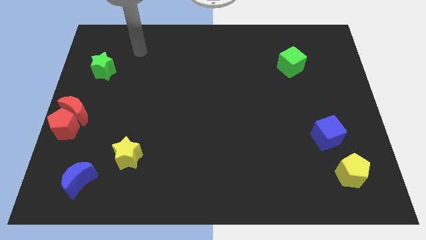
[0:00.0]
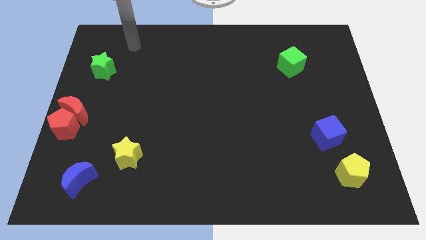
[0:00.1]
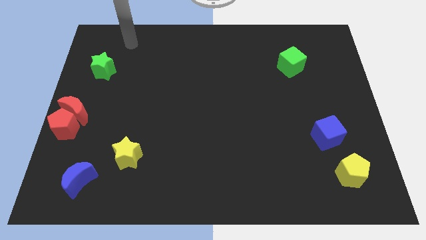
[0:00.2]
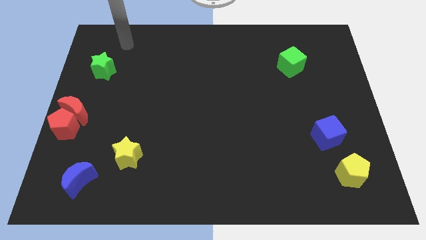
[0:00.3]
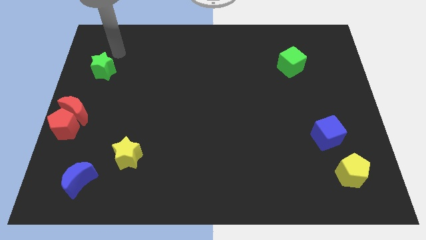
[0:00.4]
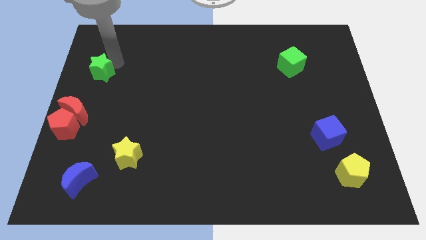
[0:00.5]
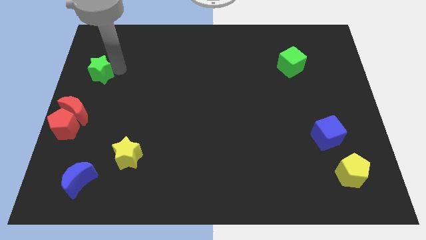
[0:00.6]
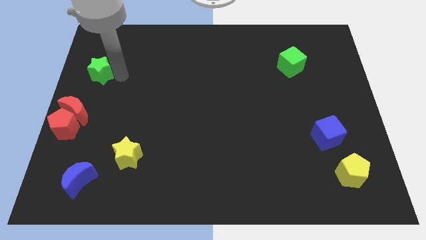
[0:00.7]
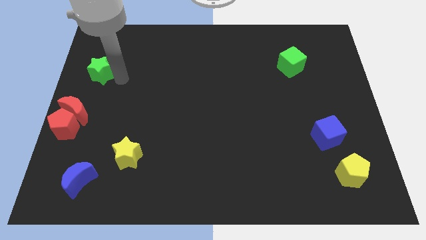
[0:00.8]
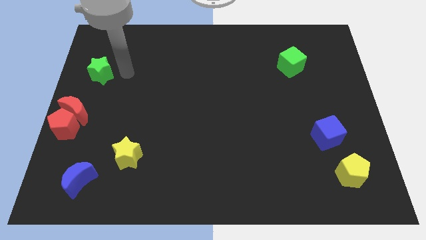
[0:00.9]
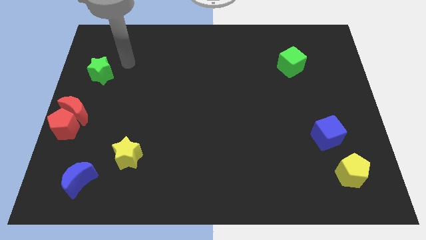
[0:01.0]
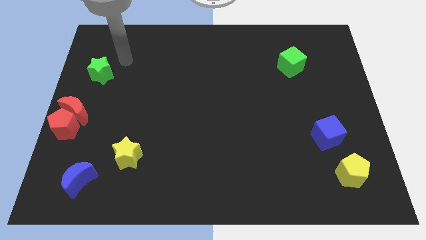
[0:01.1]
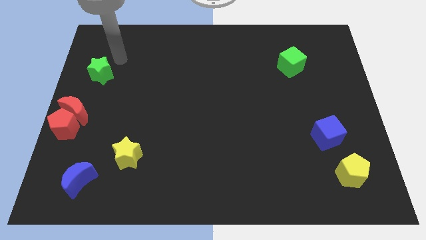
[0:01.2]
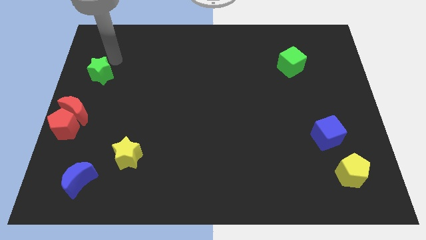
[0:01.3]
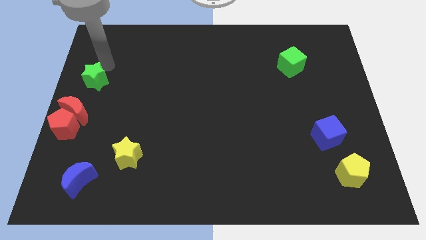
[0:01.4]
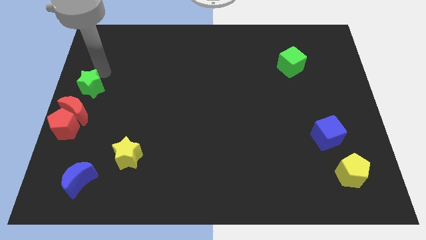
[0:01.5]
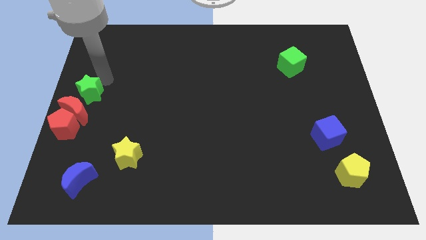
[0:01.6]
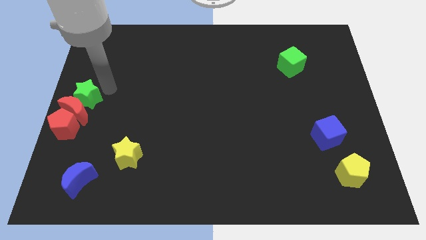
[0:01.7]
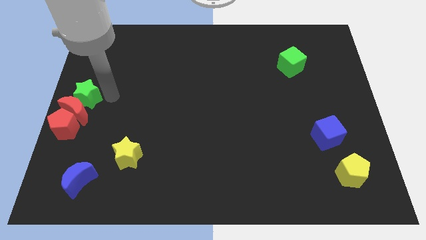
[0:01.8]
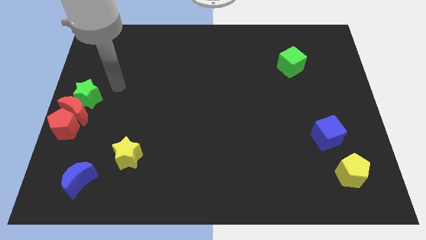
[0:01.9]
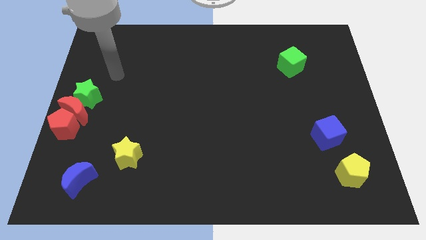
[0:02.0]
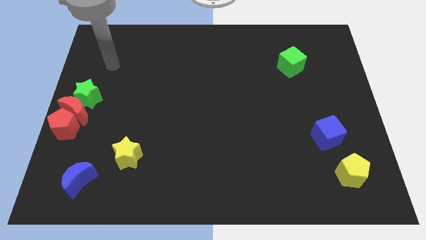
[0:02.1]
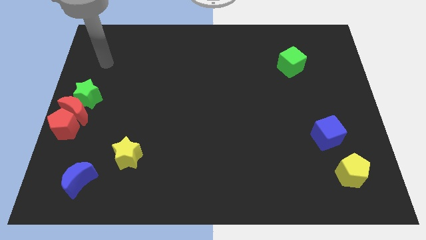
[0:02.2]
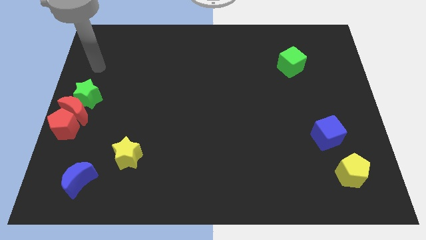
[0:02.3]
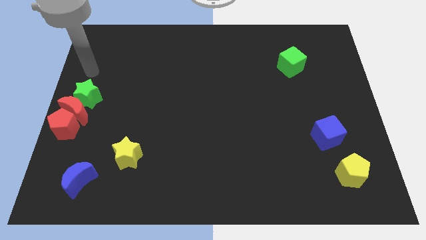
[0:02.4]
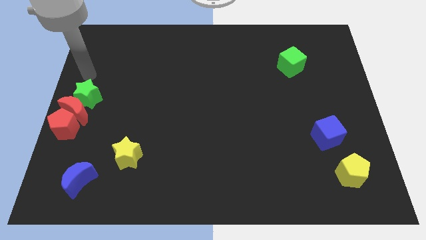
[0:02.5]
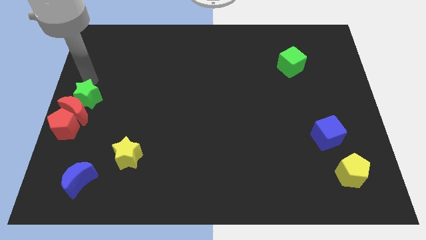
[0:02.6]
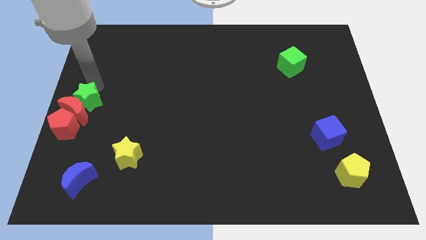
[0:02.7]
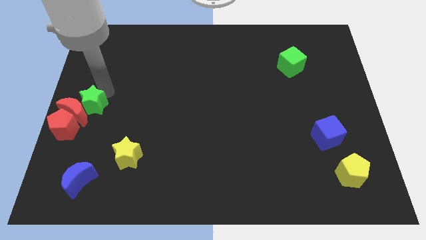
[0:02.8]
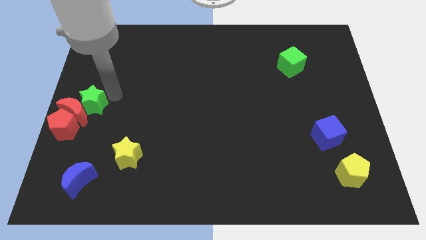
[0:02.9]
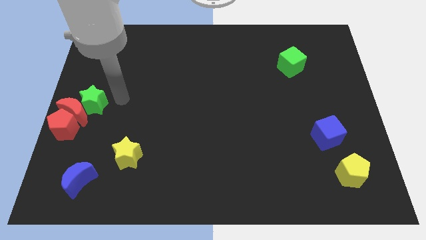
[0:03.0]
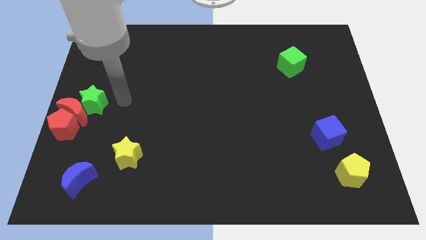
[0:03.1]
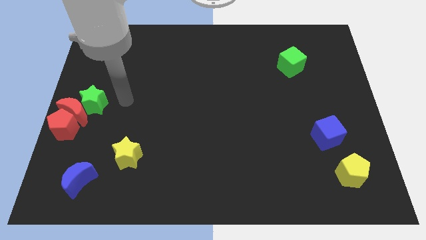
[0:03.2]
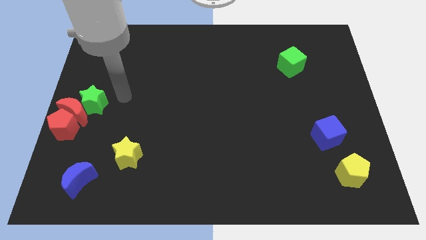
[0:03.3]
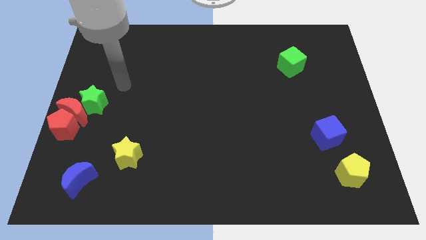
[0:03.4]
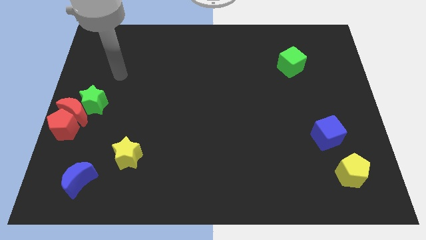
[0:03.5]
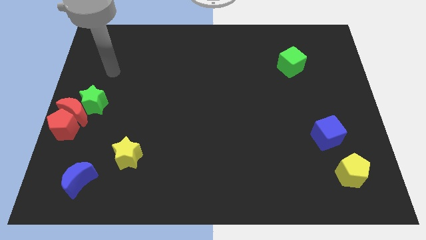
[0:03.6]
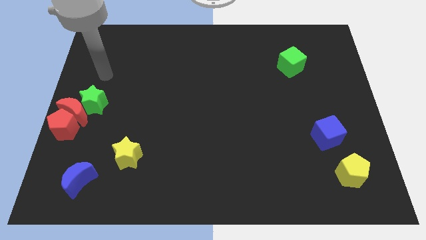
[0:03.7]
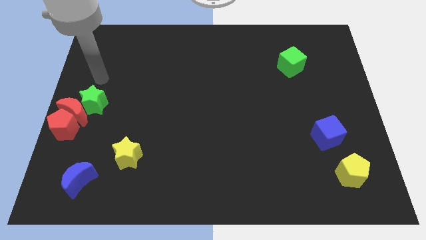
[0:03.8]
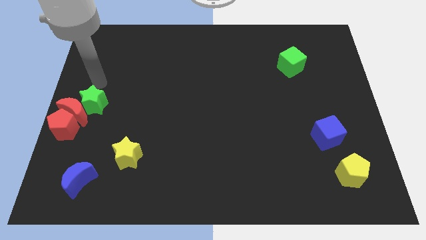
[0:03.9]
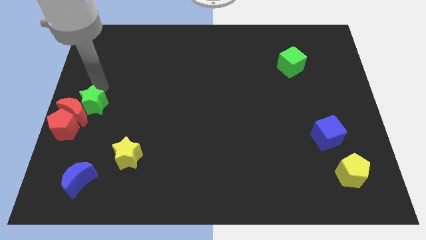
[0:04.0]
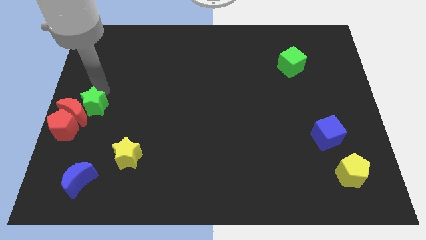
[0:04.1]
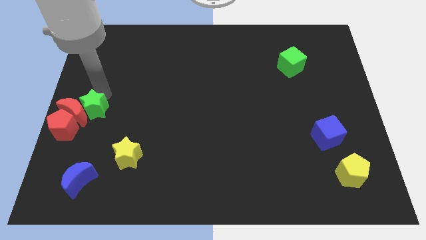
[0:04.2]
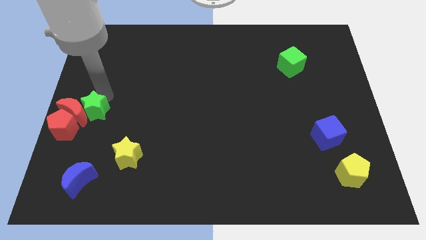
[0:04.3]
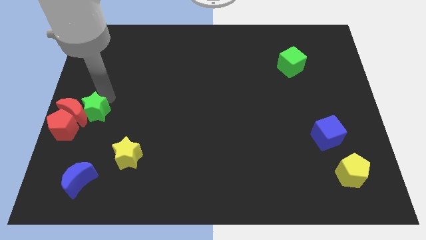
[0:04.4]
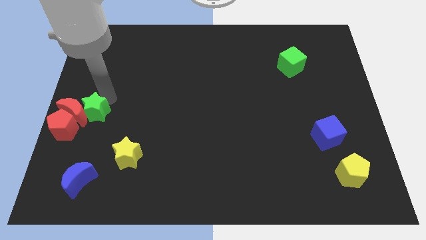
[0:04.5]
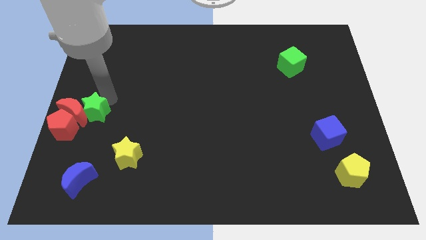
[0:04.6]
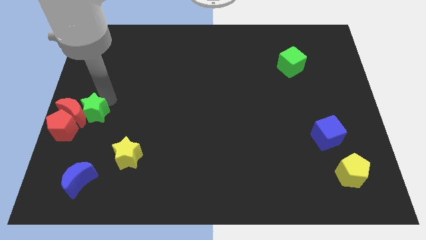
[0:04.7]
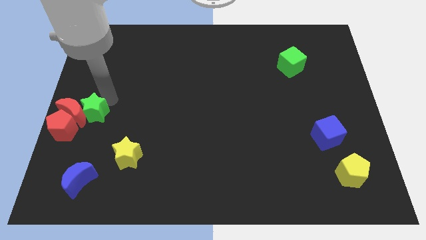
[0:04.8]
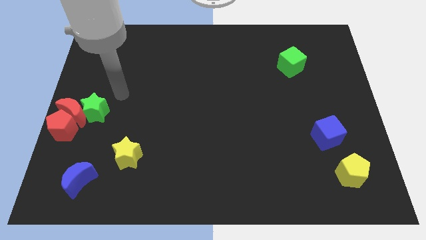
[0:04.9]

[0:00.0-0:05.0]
move the green star into the red moon

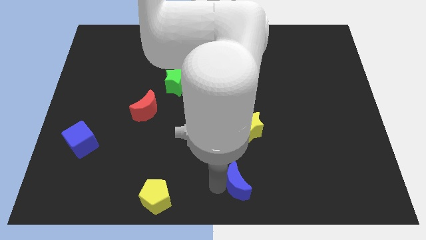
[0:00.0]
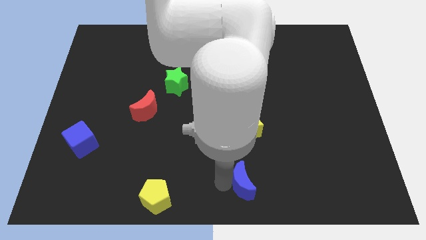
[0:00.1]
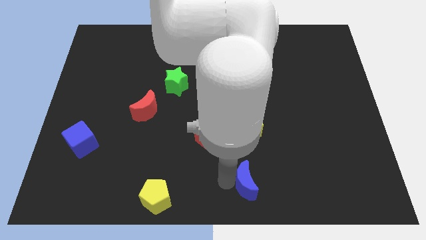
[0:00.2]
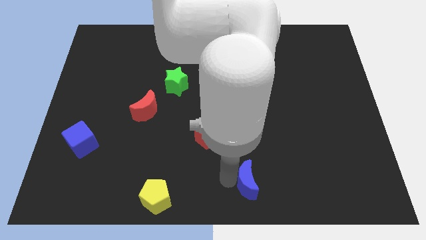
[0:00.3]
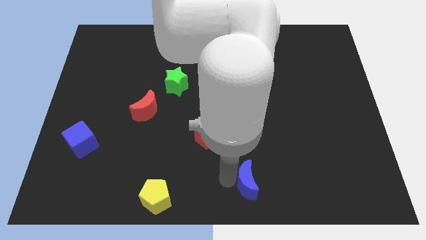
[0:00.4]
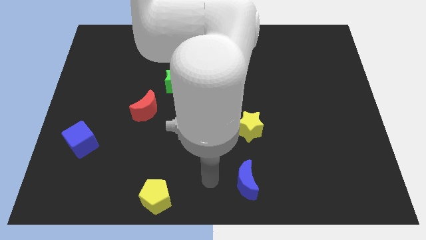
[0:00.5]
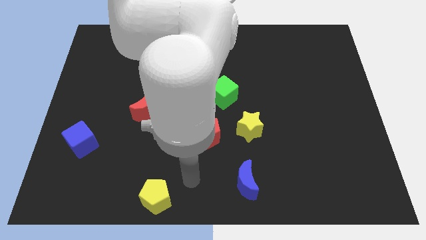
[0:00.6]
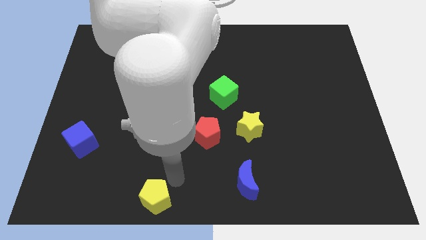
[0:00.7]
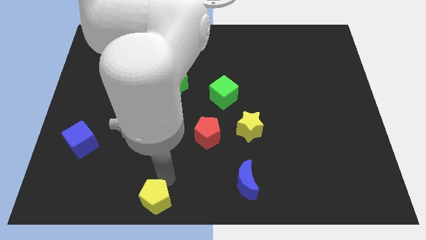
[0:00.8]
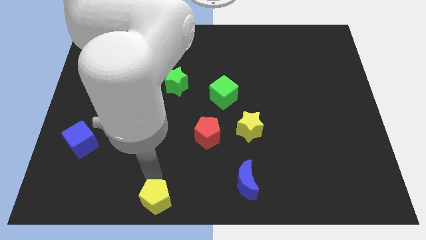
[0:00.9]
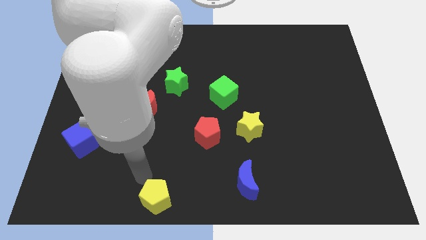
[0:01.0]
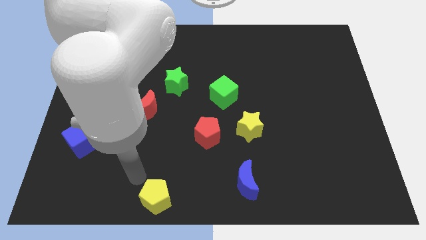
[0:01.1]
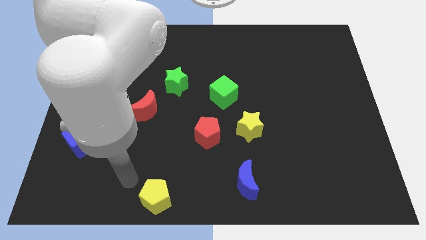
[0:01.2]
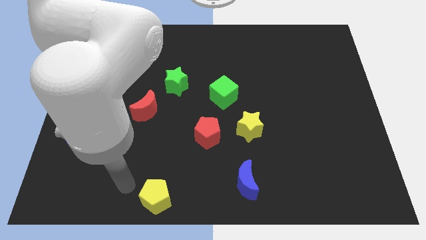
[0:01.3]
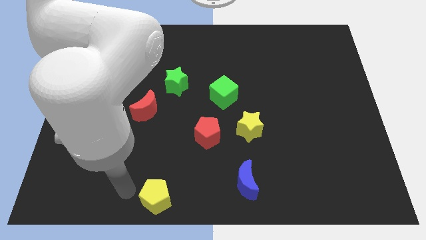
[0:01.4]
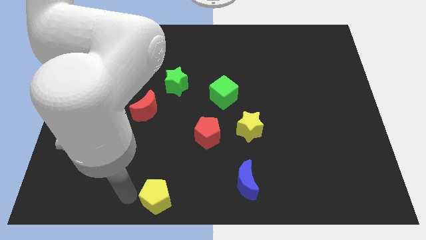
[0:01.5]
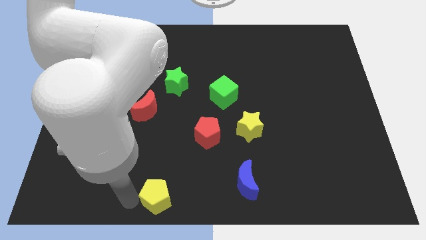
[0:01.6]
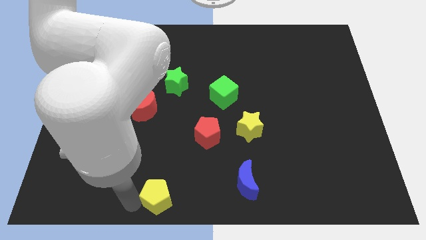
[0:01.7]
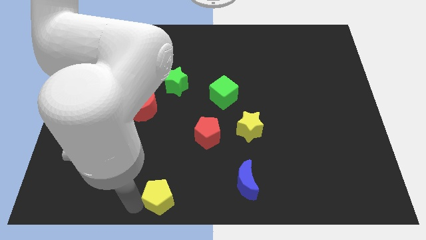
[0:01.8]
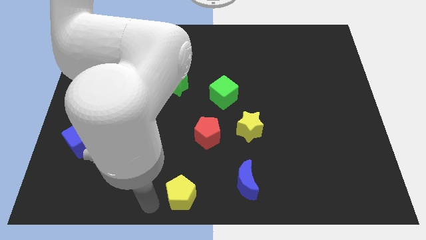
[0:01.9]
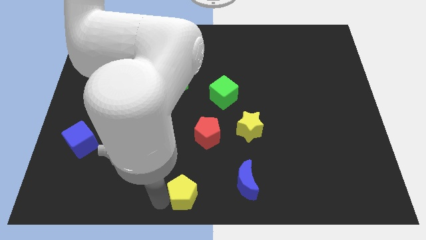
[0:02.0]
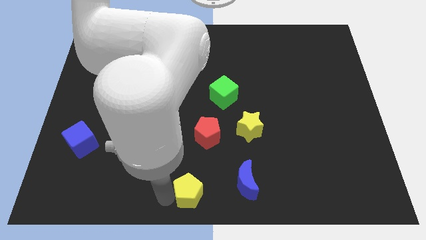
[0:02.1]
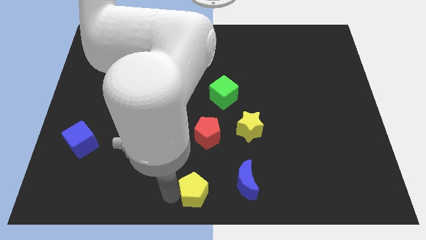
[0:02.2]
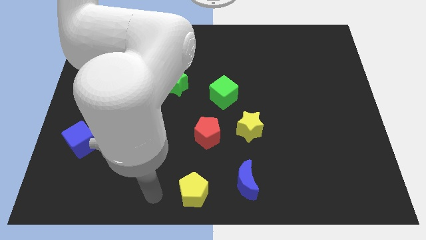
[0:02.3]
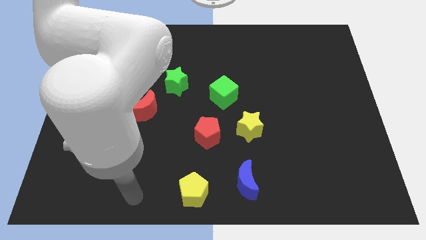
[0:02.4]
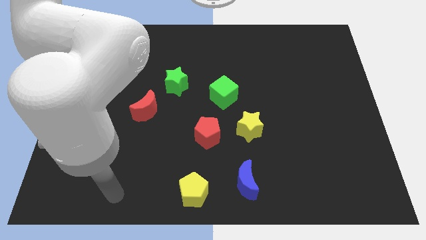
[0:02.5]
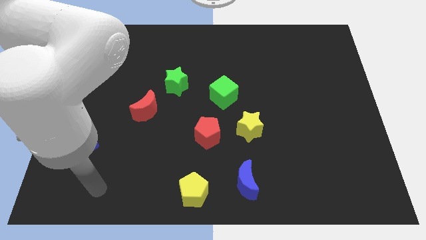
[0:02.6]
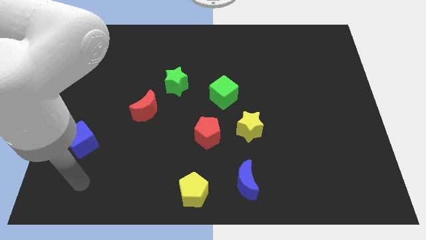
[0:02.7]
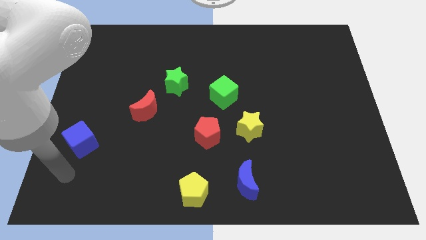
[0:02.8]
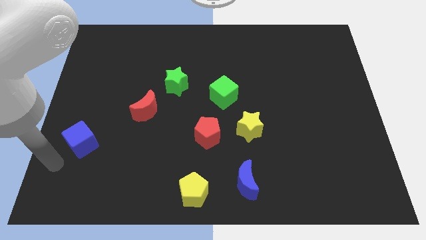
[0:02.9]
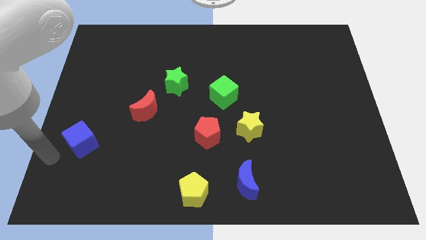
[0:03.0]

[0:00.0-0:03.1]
push the yellow pentagon to the right

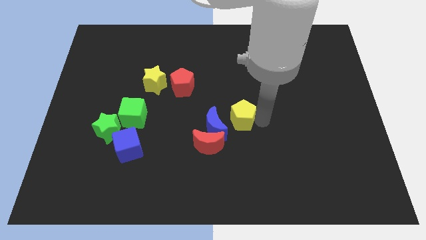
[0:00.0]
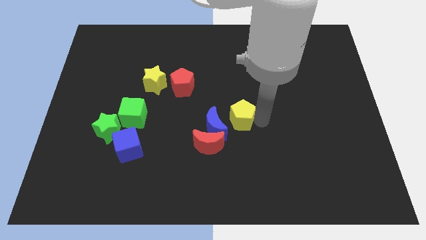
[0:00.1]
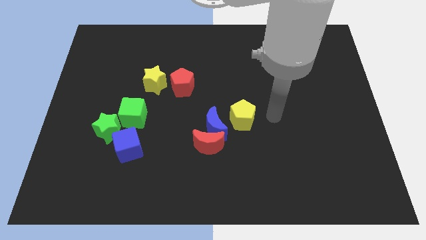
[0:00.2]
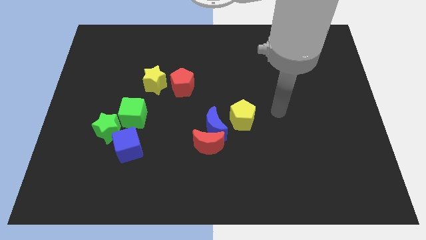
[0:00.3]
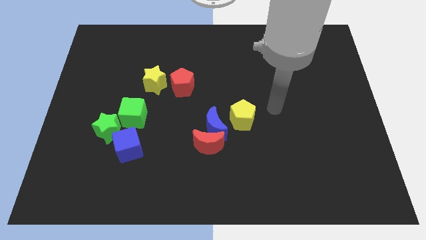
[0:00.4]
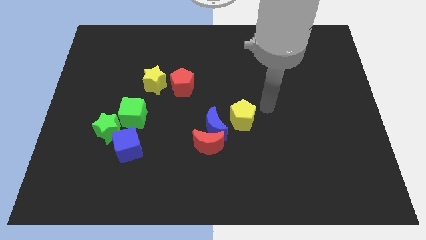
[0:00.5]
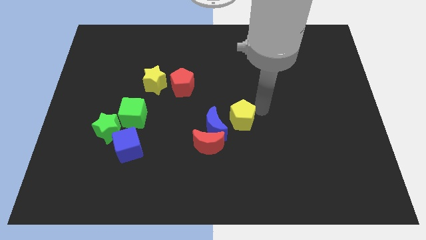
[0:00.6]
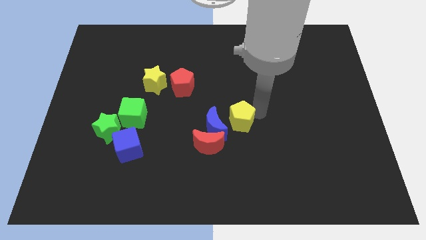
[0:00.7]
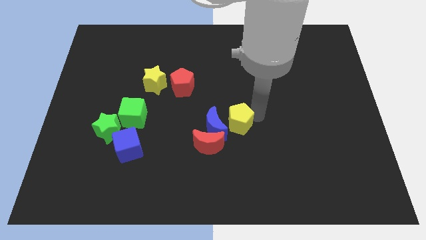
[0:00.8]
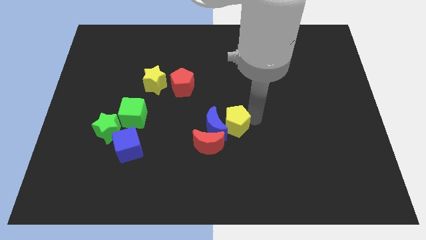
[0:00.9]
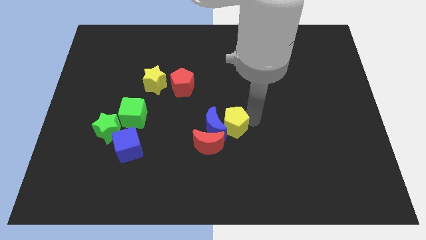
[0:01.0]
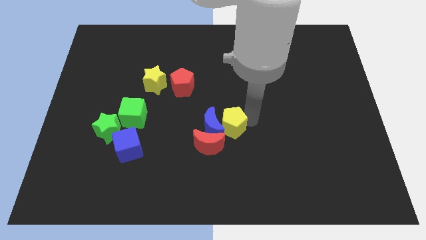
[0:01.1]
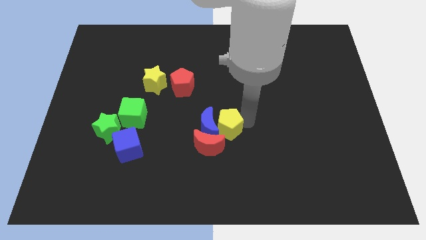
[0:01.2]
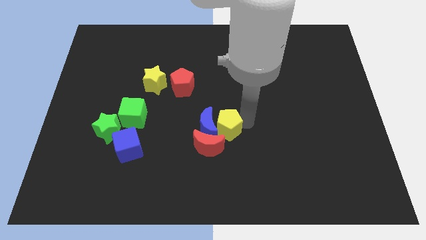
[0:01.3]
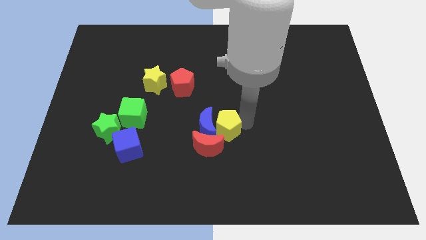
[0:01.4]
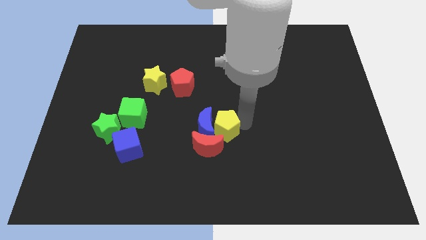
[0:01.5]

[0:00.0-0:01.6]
push the yellow pentagon into blue crescent
